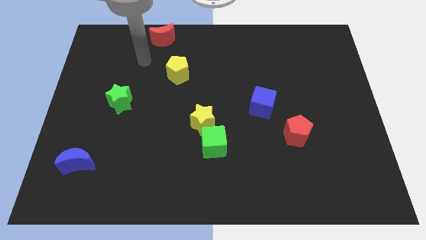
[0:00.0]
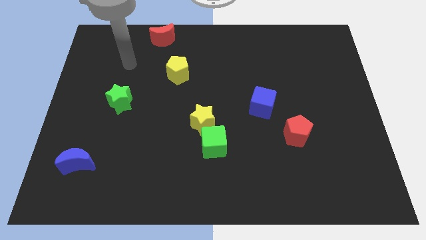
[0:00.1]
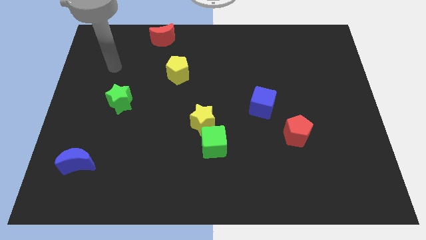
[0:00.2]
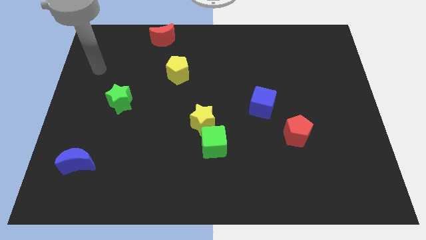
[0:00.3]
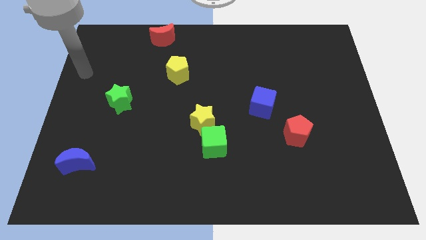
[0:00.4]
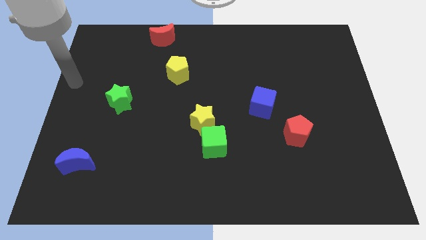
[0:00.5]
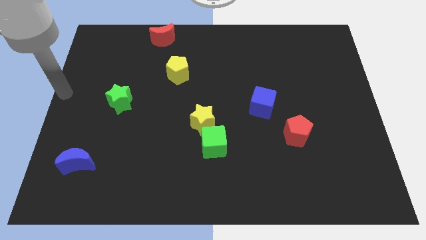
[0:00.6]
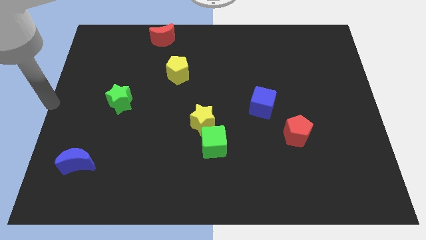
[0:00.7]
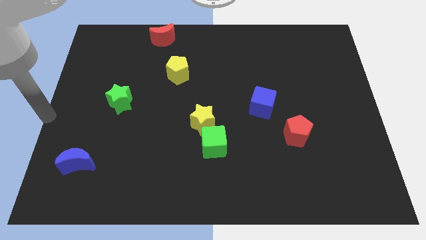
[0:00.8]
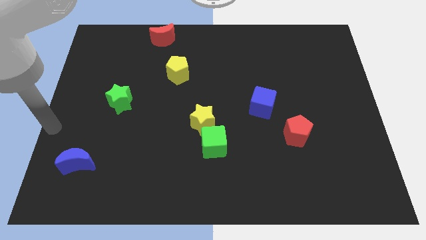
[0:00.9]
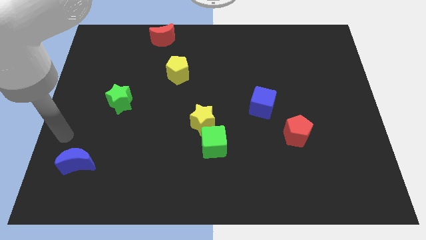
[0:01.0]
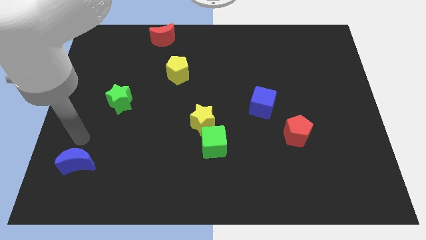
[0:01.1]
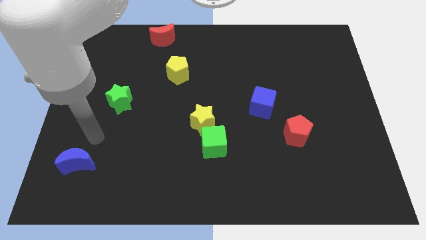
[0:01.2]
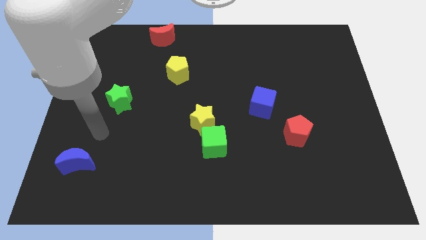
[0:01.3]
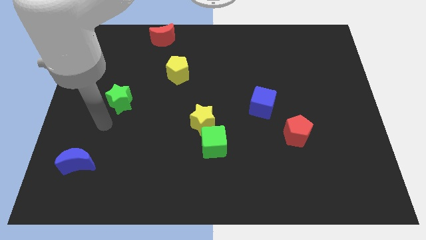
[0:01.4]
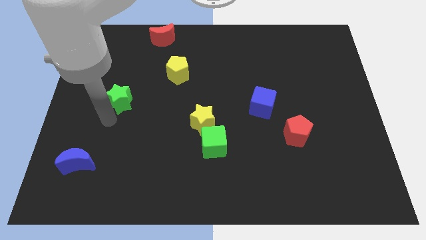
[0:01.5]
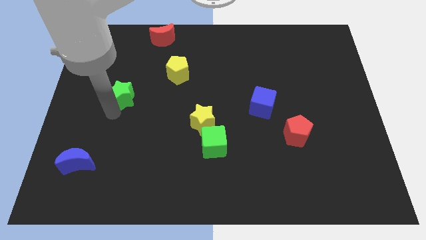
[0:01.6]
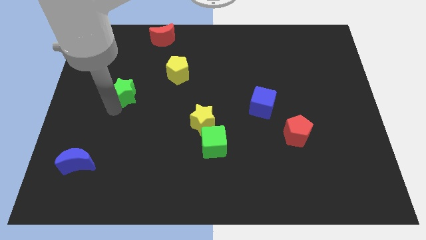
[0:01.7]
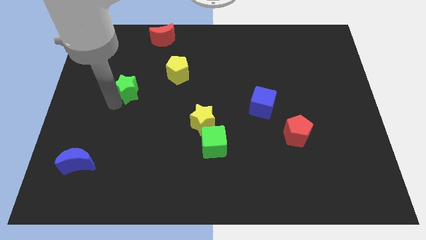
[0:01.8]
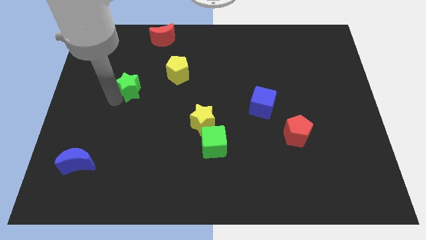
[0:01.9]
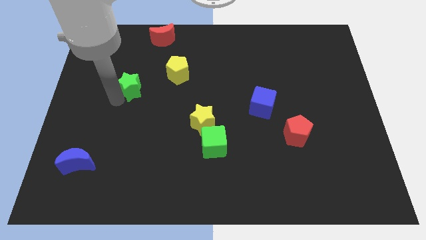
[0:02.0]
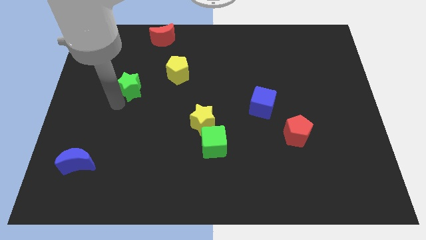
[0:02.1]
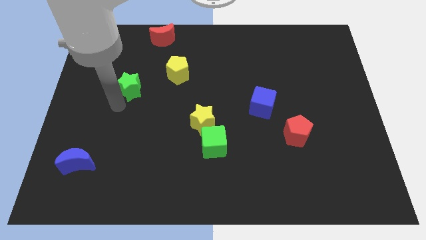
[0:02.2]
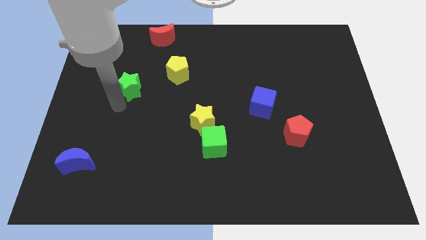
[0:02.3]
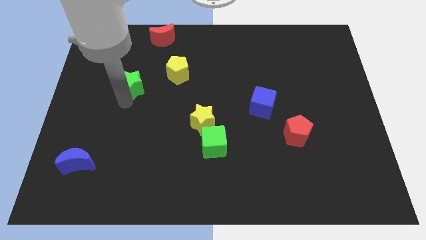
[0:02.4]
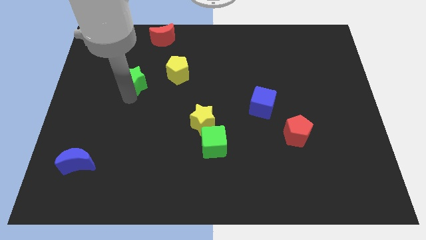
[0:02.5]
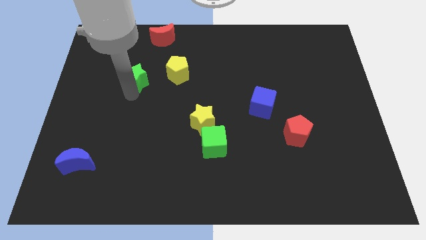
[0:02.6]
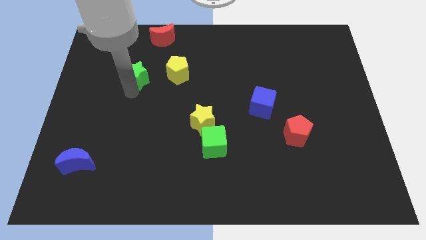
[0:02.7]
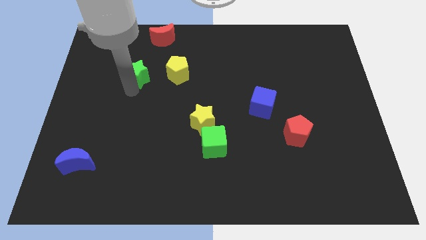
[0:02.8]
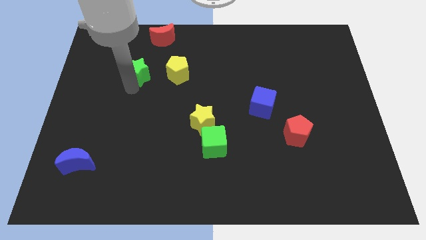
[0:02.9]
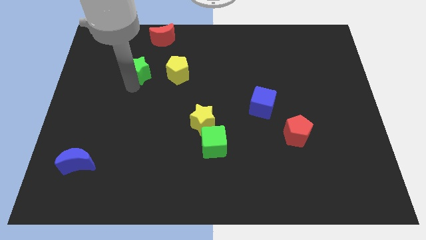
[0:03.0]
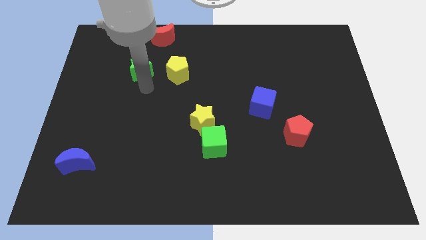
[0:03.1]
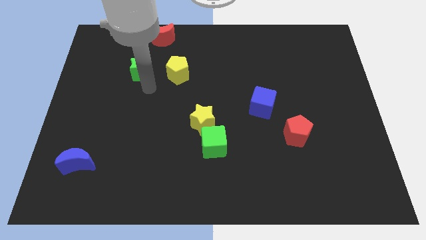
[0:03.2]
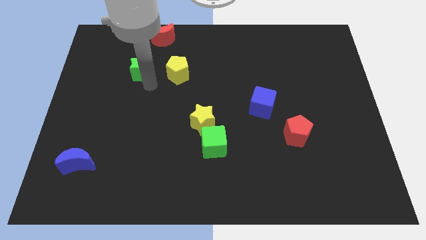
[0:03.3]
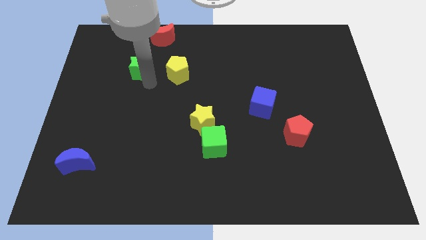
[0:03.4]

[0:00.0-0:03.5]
move the green star to the left of the yellow pentagon

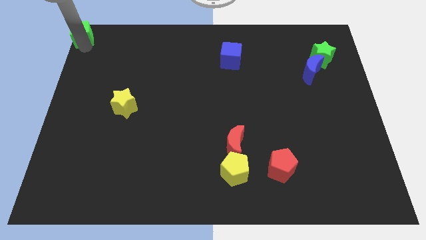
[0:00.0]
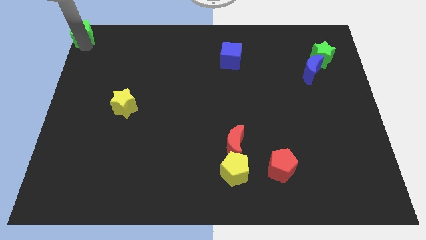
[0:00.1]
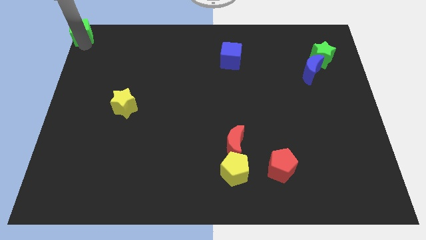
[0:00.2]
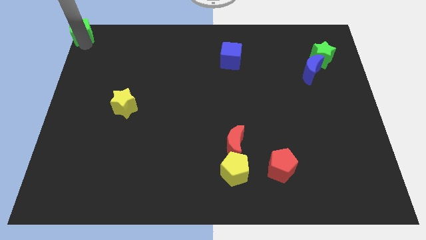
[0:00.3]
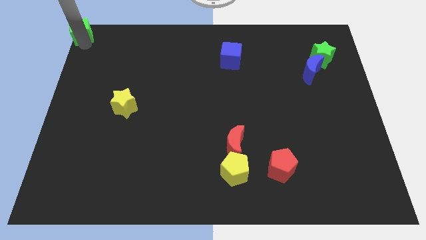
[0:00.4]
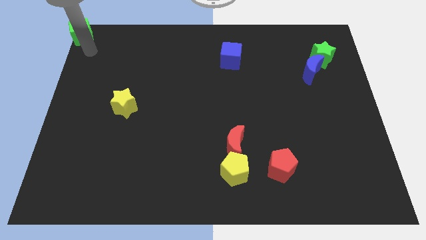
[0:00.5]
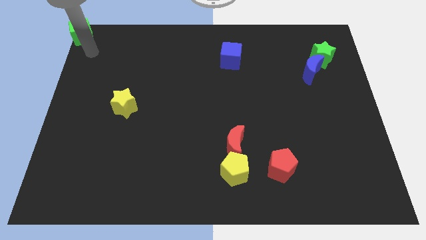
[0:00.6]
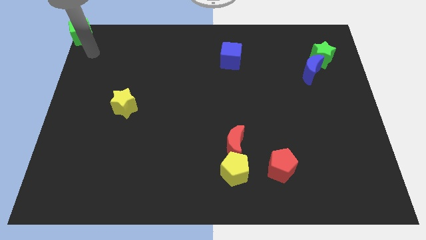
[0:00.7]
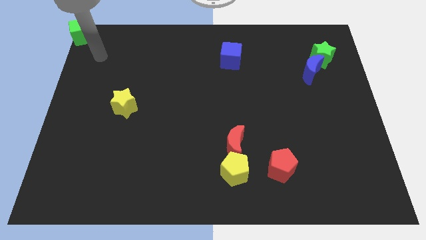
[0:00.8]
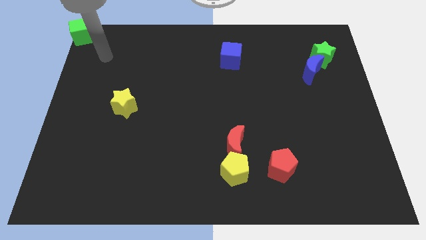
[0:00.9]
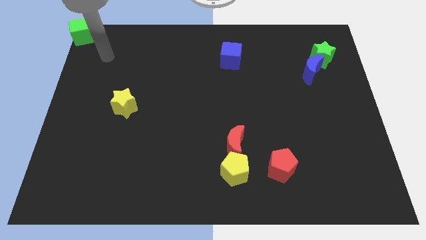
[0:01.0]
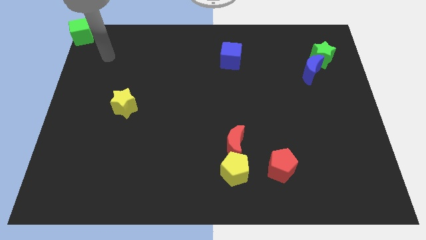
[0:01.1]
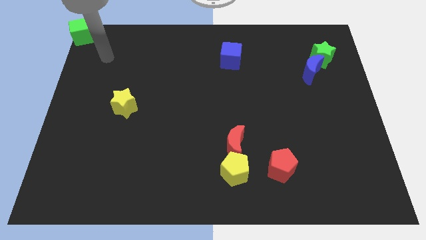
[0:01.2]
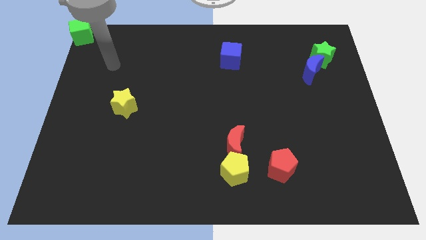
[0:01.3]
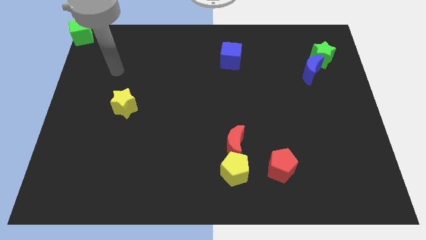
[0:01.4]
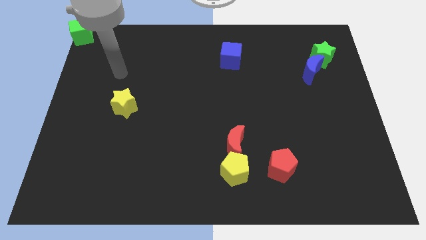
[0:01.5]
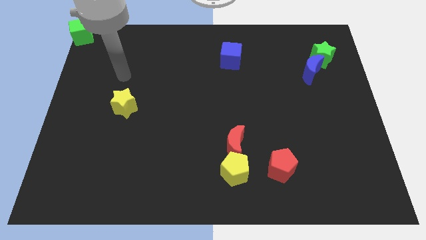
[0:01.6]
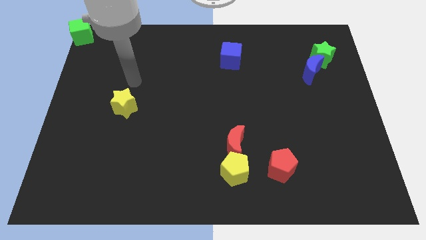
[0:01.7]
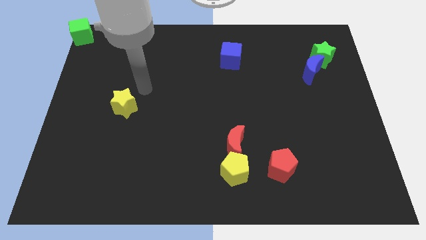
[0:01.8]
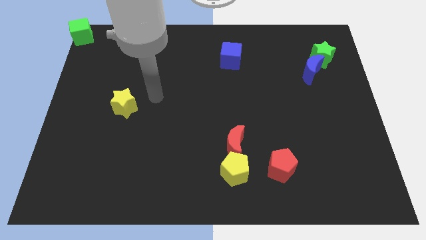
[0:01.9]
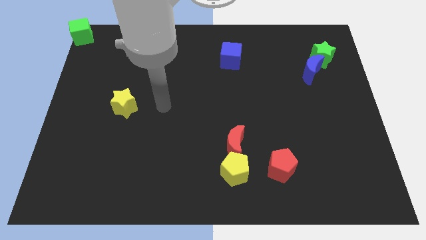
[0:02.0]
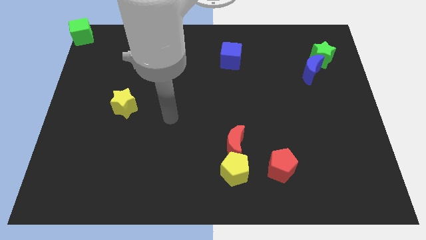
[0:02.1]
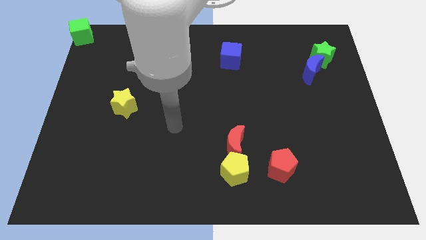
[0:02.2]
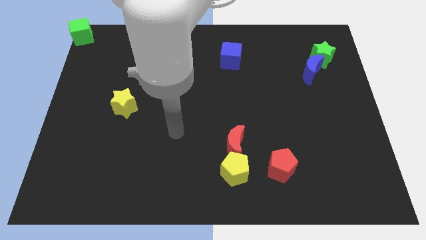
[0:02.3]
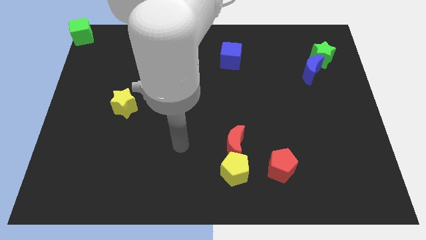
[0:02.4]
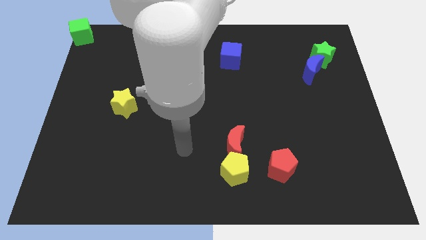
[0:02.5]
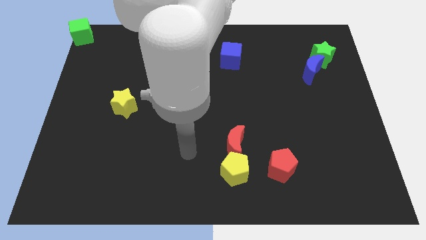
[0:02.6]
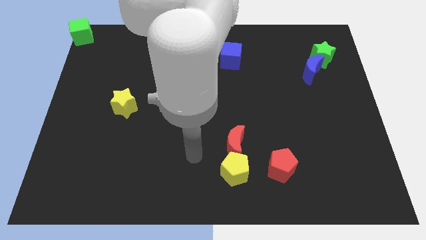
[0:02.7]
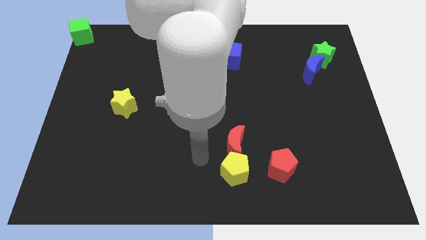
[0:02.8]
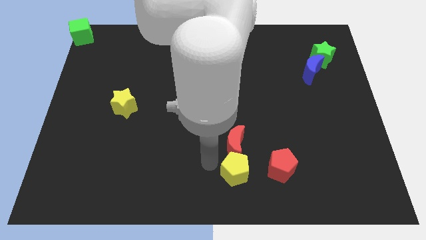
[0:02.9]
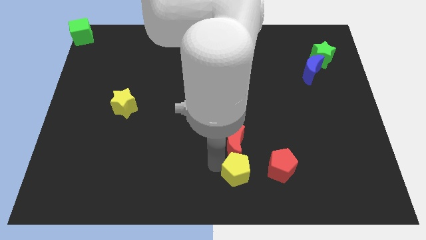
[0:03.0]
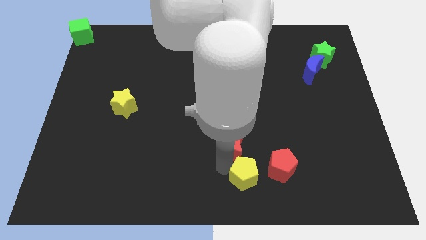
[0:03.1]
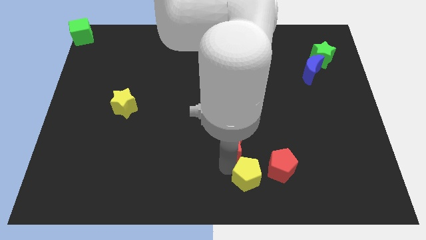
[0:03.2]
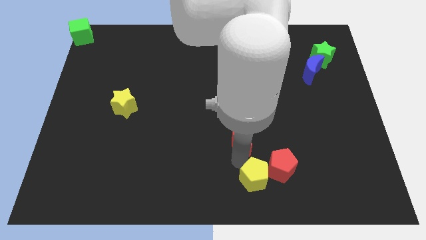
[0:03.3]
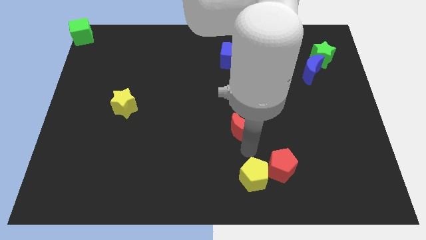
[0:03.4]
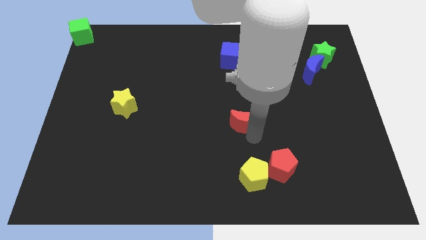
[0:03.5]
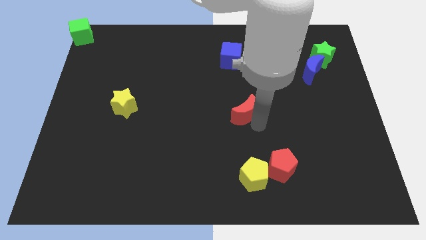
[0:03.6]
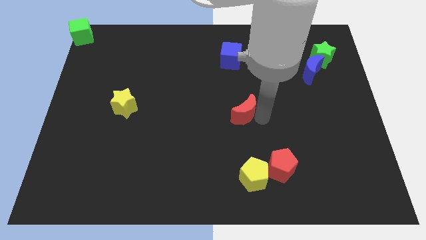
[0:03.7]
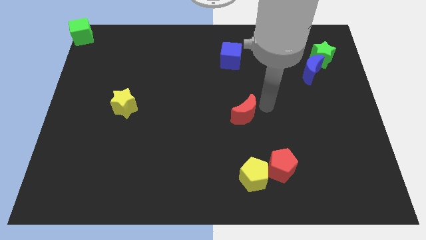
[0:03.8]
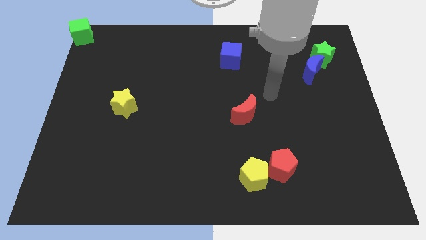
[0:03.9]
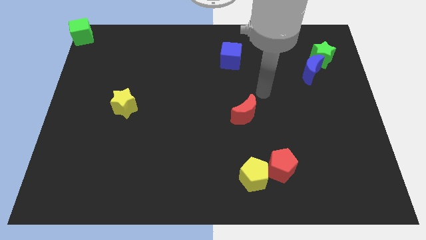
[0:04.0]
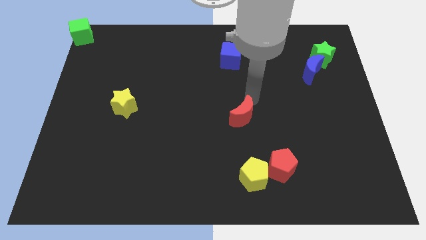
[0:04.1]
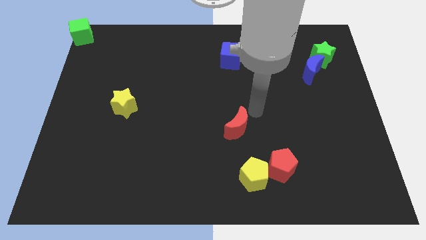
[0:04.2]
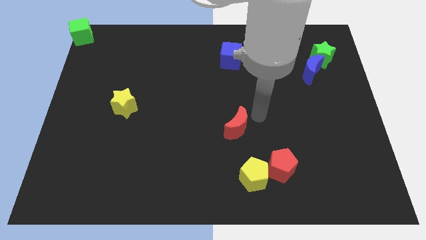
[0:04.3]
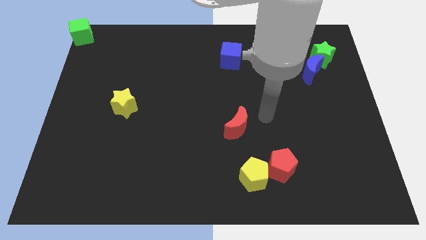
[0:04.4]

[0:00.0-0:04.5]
move arm to the red moon

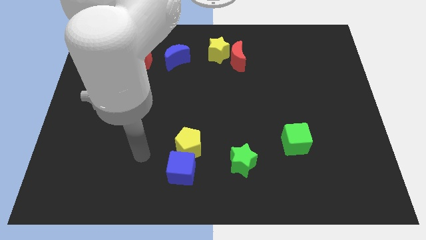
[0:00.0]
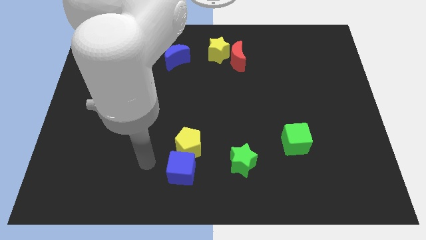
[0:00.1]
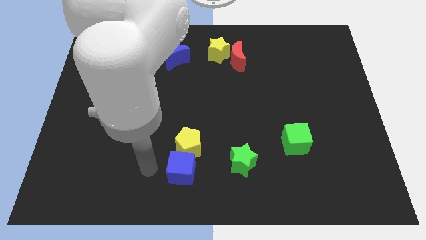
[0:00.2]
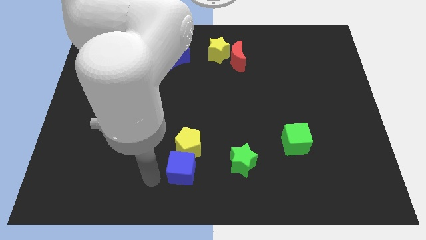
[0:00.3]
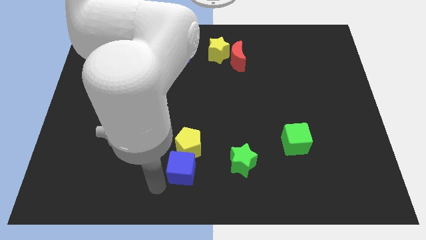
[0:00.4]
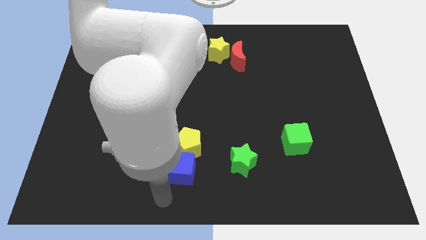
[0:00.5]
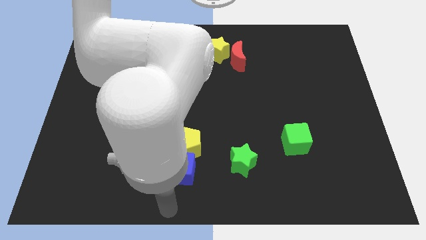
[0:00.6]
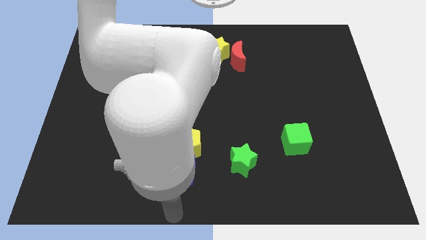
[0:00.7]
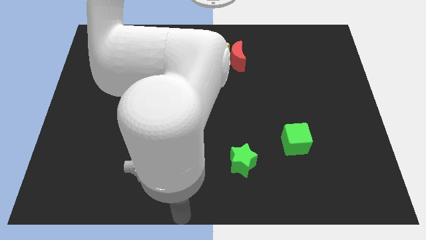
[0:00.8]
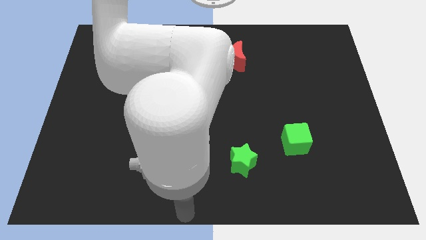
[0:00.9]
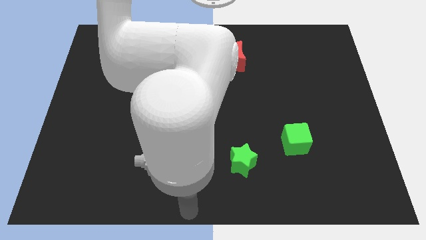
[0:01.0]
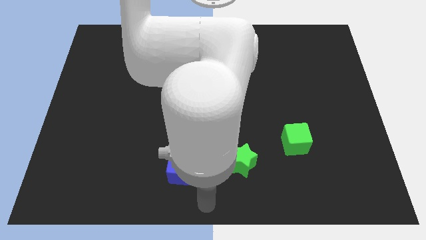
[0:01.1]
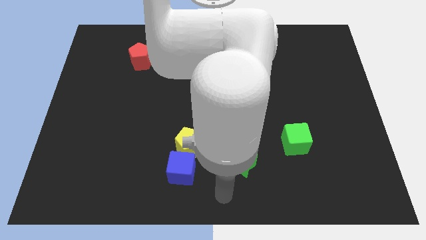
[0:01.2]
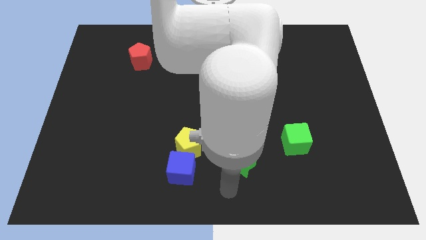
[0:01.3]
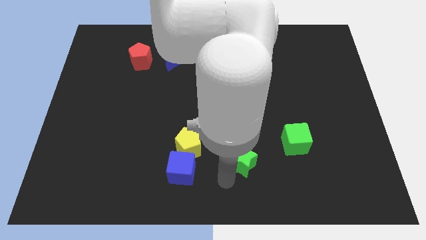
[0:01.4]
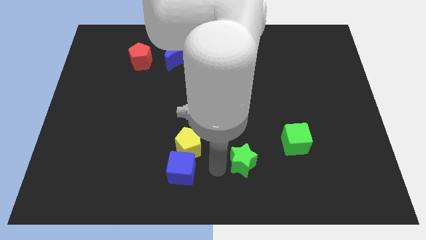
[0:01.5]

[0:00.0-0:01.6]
move the arm left to the green star
